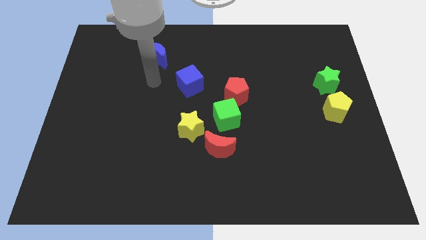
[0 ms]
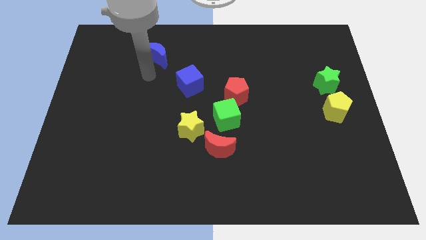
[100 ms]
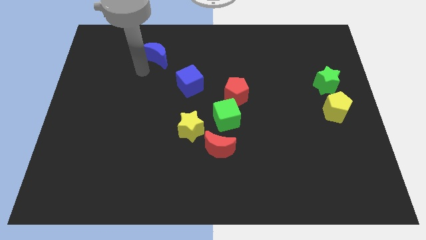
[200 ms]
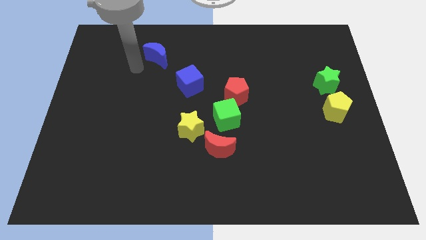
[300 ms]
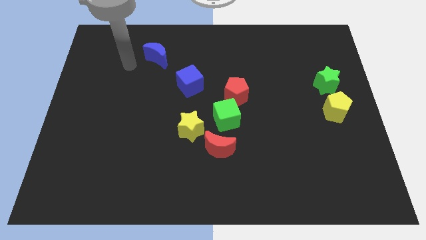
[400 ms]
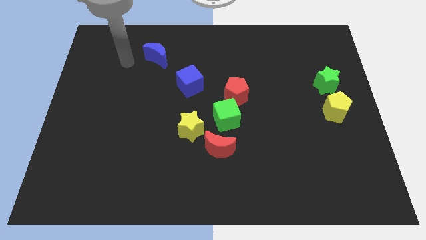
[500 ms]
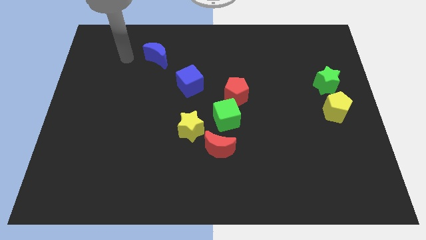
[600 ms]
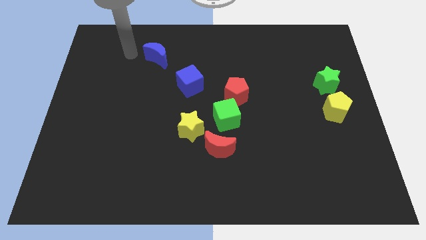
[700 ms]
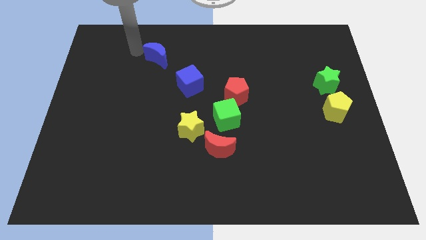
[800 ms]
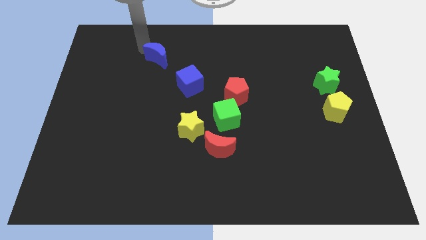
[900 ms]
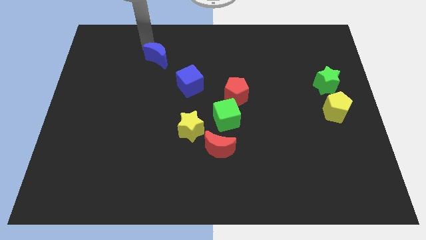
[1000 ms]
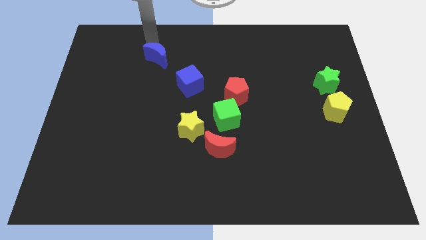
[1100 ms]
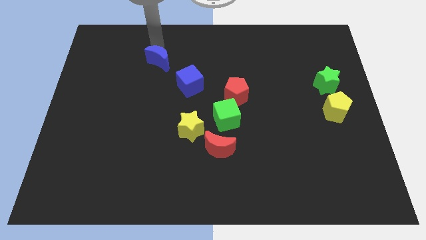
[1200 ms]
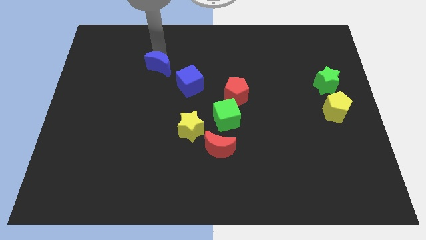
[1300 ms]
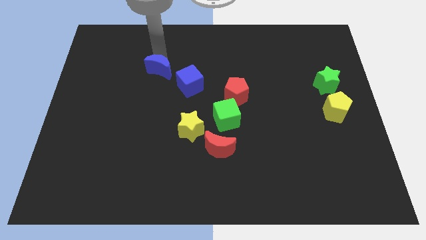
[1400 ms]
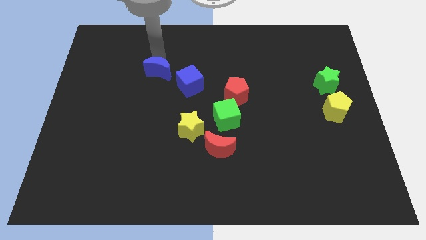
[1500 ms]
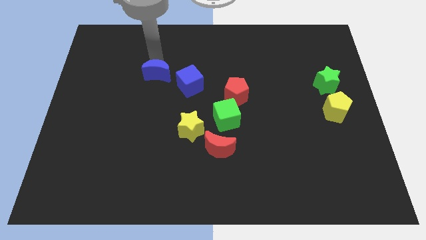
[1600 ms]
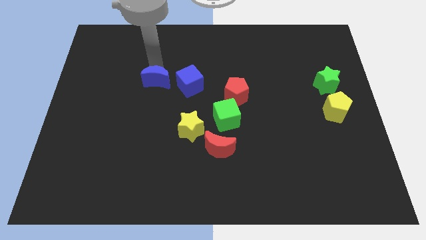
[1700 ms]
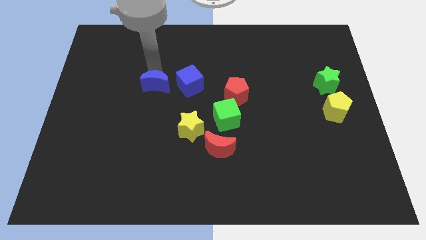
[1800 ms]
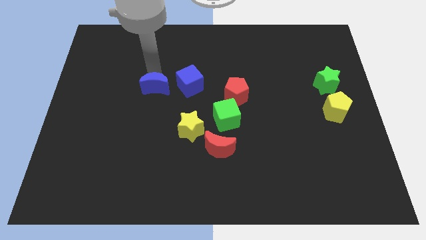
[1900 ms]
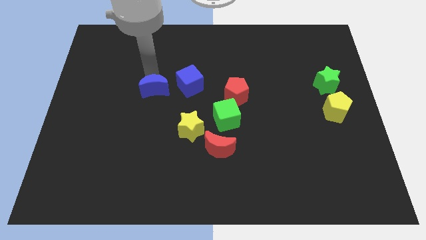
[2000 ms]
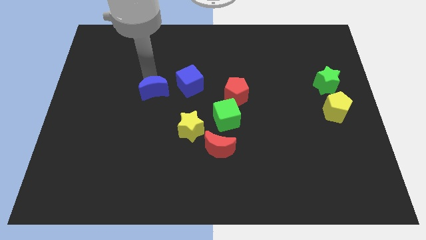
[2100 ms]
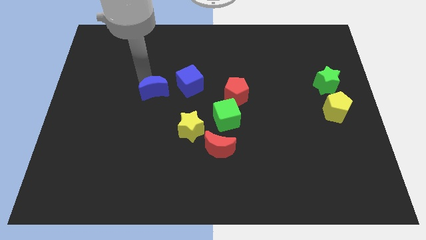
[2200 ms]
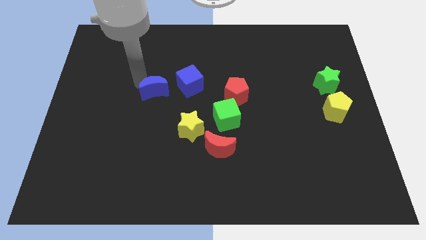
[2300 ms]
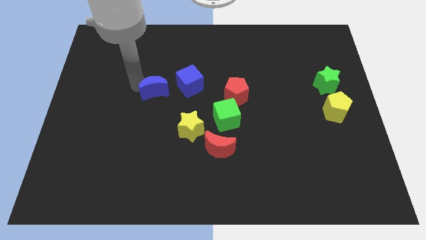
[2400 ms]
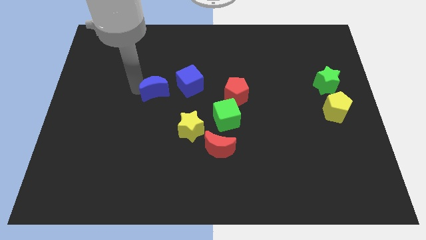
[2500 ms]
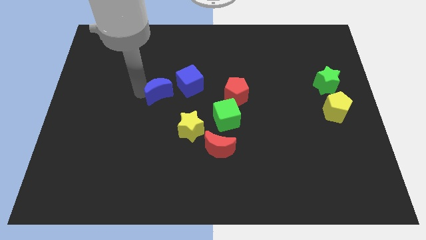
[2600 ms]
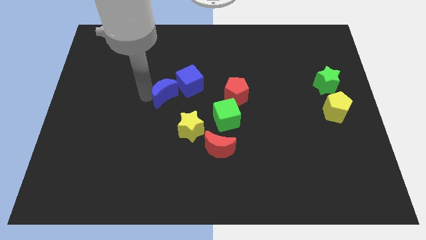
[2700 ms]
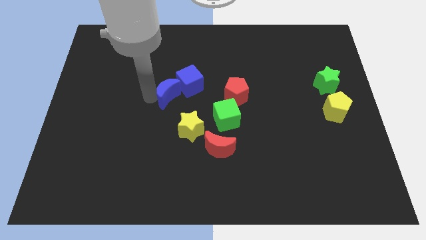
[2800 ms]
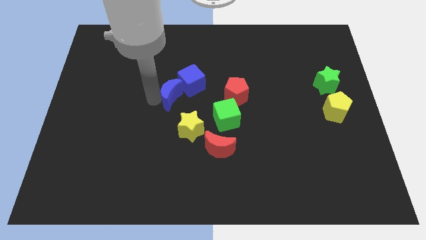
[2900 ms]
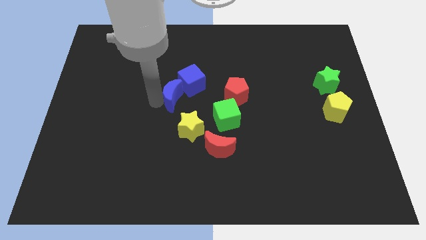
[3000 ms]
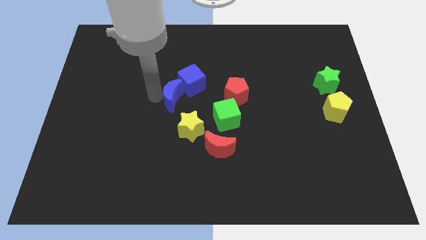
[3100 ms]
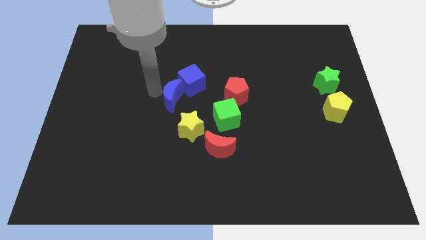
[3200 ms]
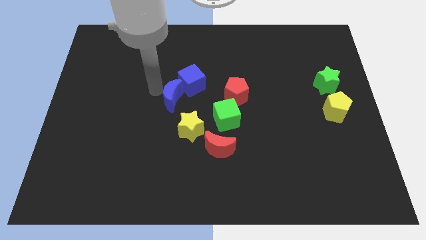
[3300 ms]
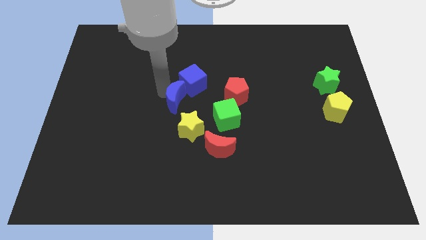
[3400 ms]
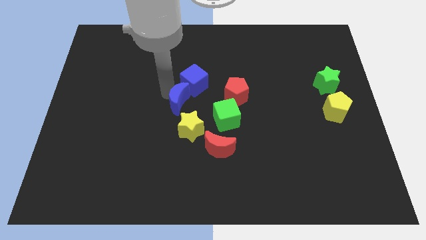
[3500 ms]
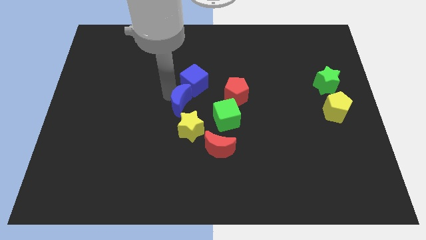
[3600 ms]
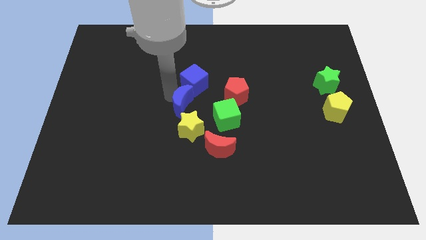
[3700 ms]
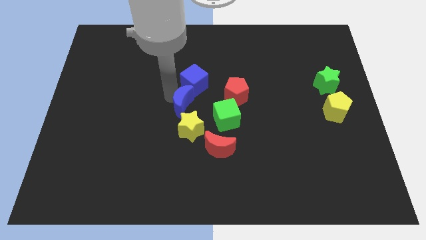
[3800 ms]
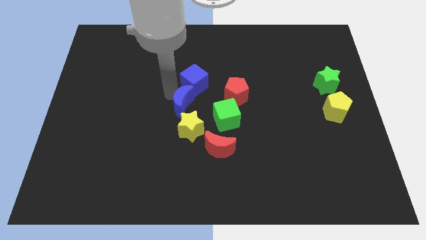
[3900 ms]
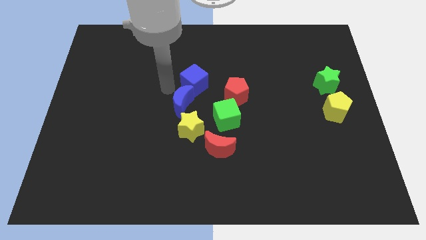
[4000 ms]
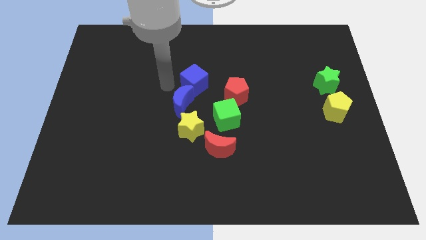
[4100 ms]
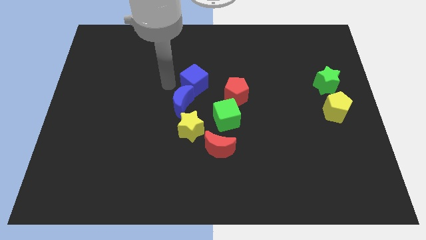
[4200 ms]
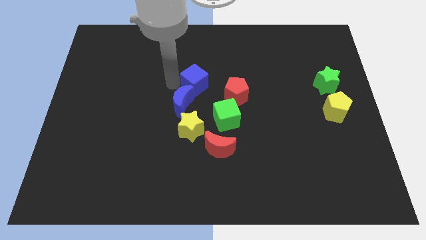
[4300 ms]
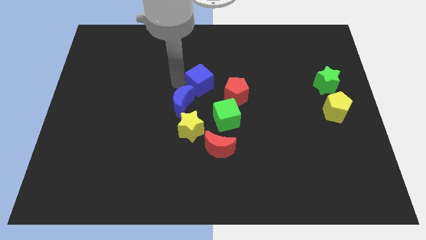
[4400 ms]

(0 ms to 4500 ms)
push the blue crescent near the yellow star

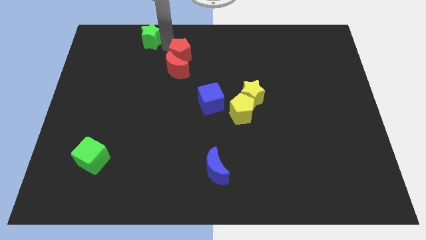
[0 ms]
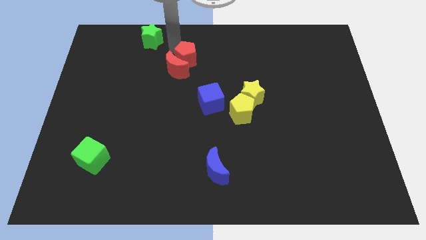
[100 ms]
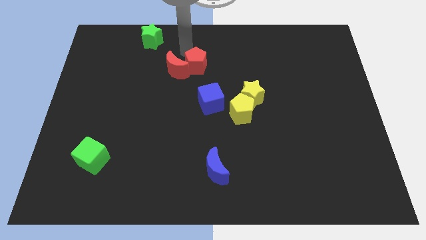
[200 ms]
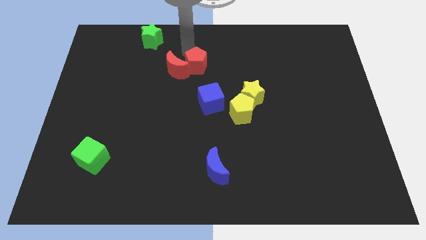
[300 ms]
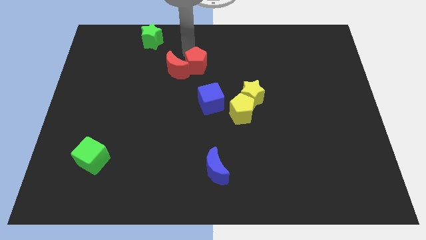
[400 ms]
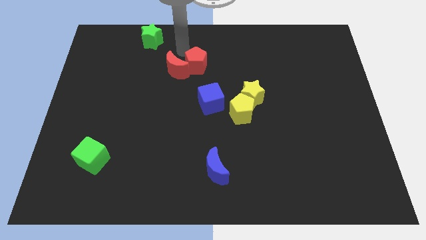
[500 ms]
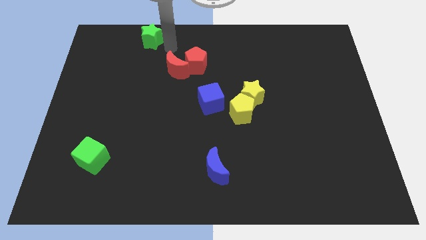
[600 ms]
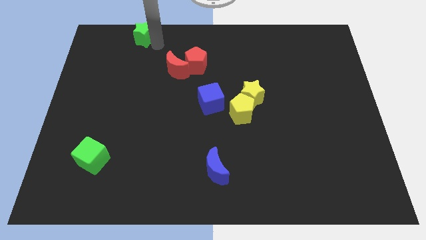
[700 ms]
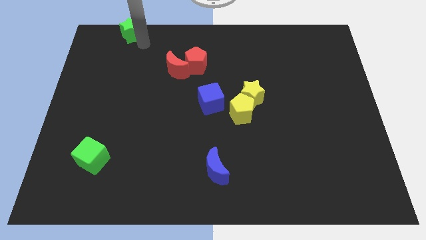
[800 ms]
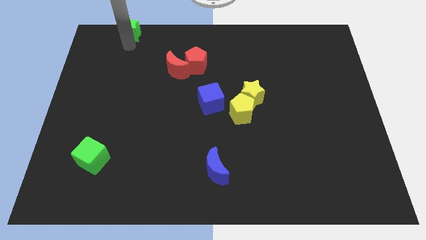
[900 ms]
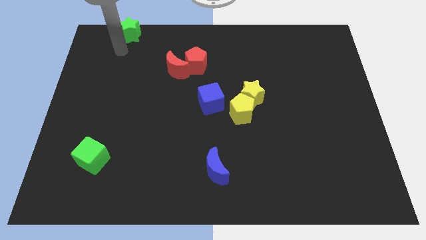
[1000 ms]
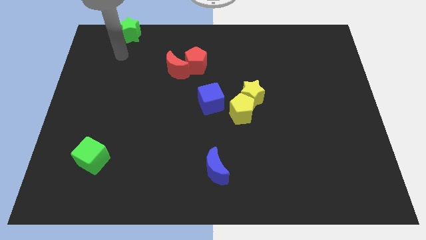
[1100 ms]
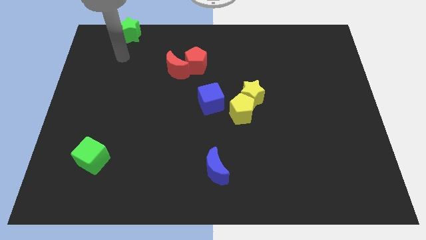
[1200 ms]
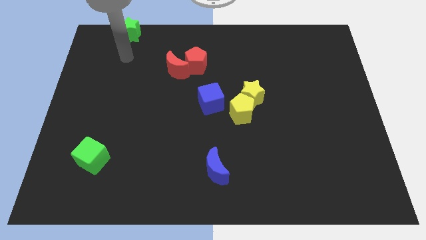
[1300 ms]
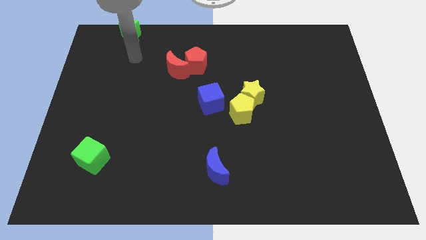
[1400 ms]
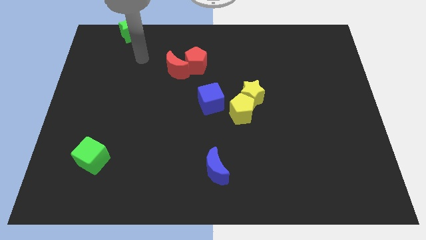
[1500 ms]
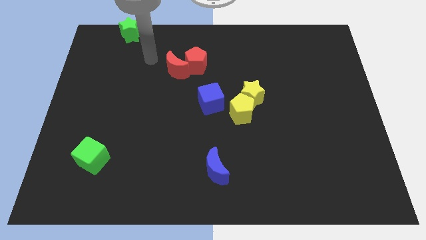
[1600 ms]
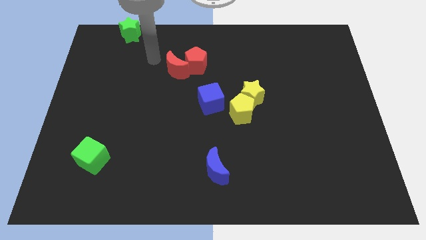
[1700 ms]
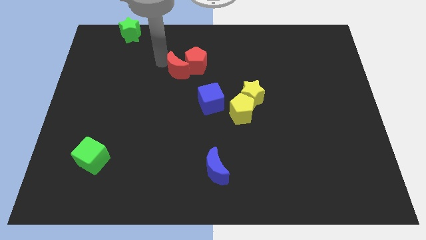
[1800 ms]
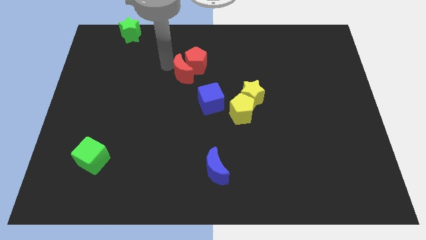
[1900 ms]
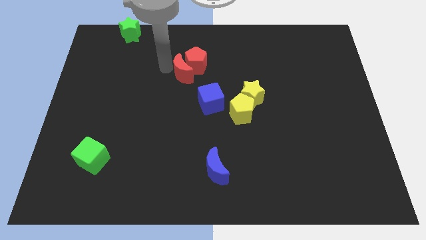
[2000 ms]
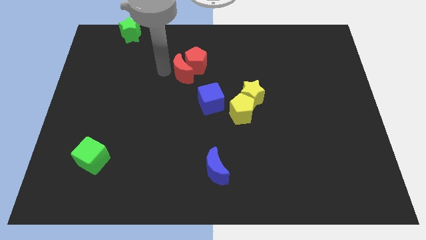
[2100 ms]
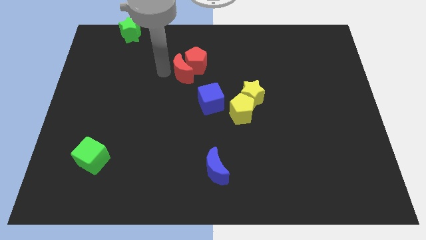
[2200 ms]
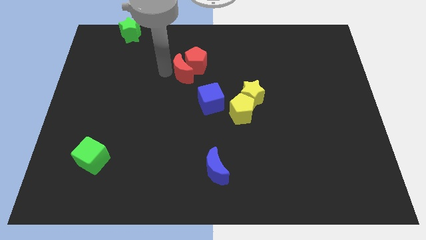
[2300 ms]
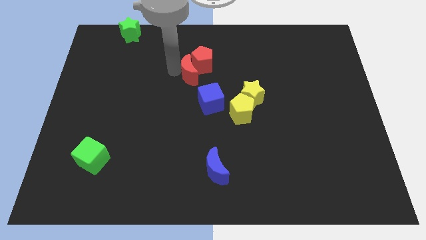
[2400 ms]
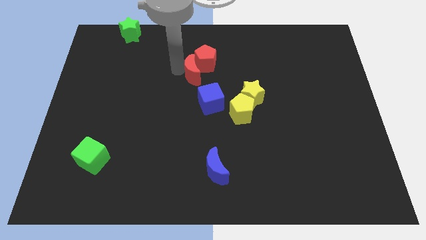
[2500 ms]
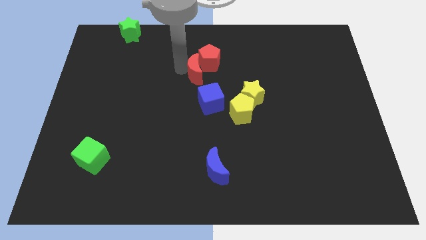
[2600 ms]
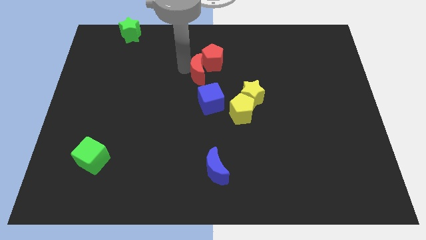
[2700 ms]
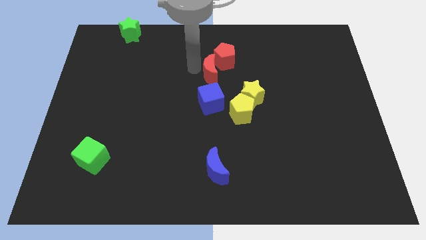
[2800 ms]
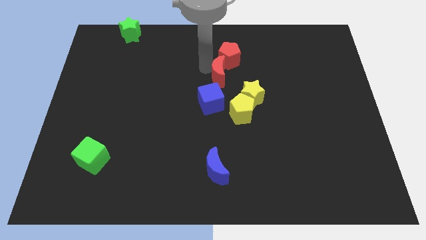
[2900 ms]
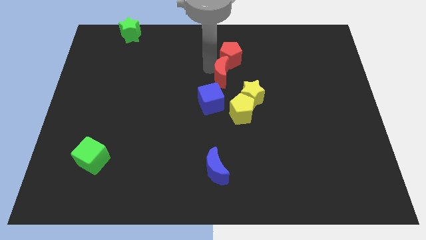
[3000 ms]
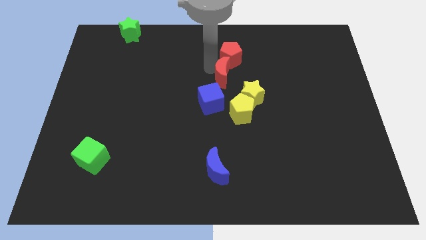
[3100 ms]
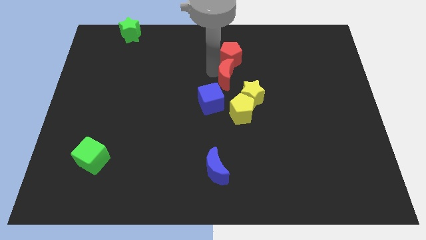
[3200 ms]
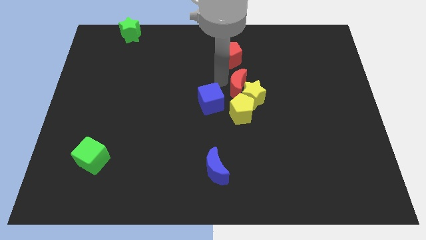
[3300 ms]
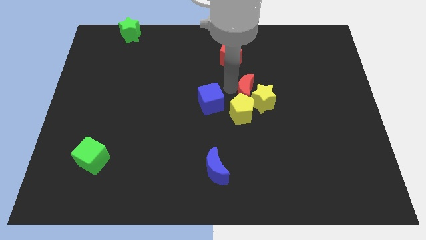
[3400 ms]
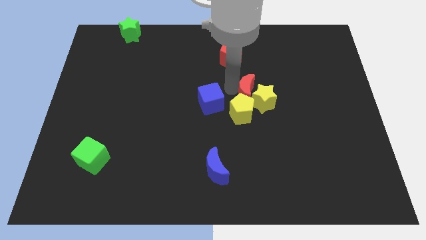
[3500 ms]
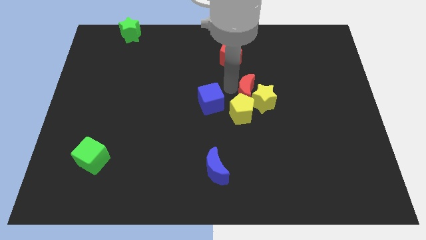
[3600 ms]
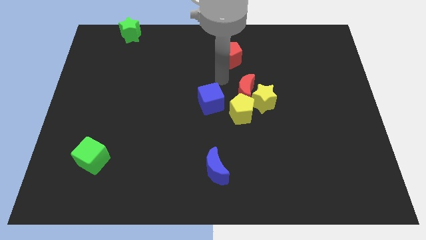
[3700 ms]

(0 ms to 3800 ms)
move the red moon above the yellow pentagon

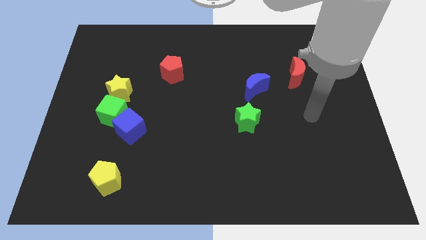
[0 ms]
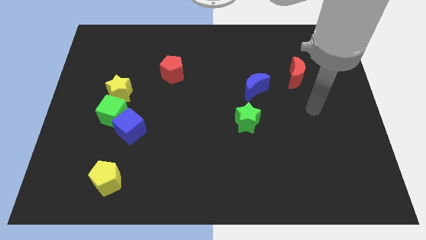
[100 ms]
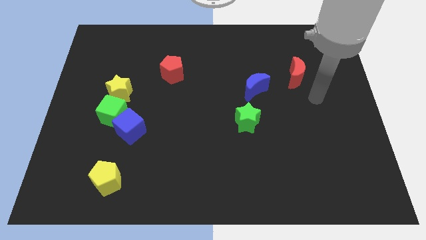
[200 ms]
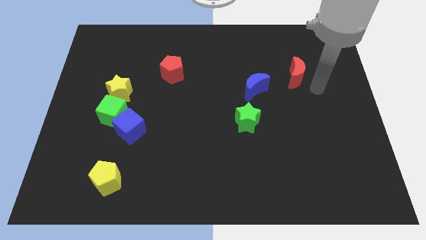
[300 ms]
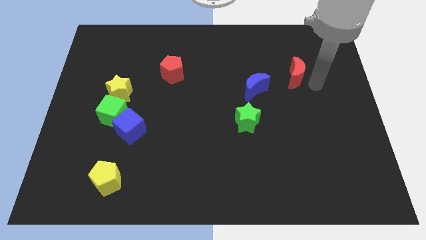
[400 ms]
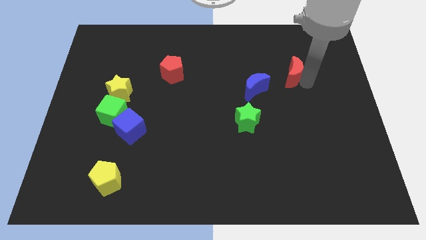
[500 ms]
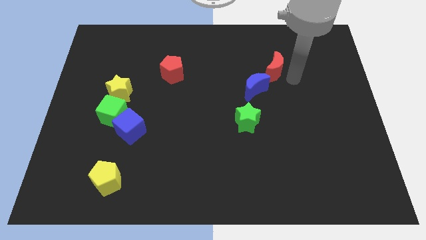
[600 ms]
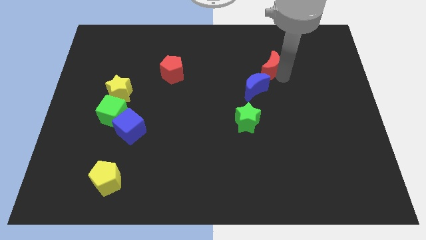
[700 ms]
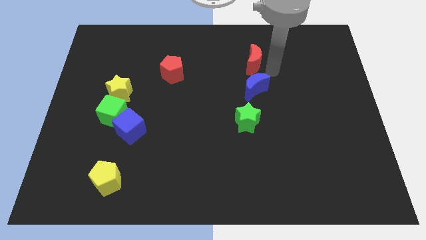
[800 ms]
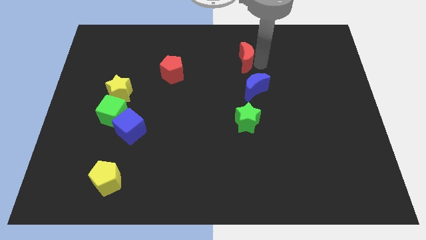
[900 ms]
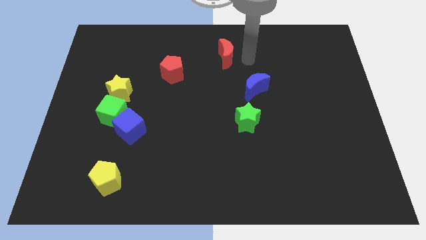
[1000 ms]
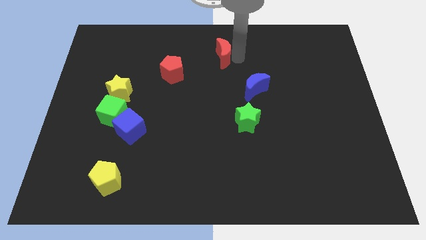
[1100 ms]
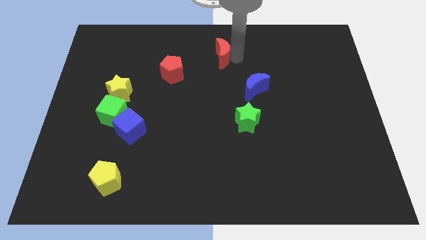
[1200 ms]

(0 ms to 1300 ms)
move the red crescent to the top center of the board
